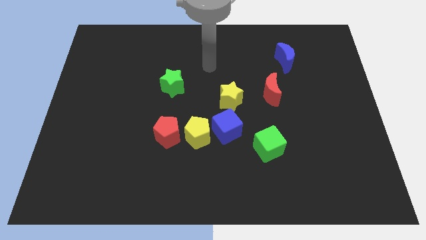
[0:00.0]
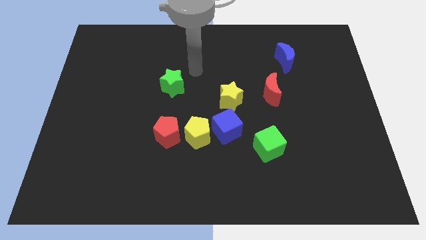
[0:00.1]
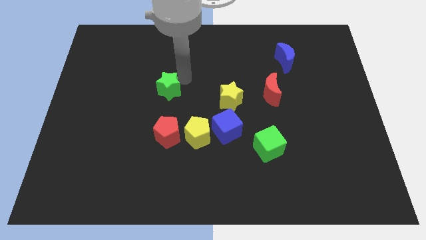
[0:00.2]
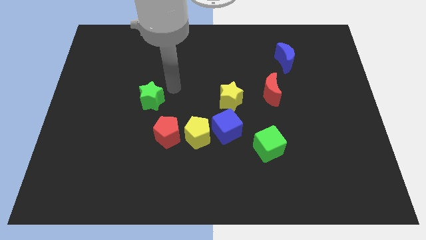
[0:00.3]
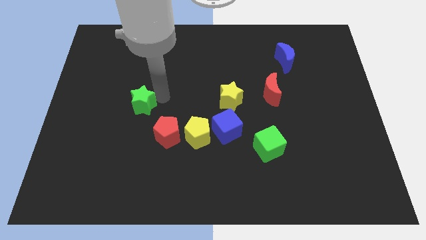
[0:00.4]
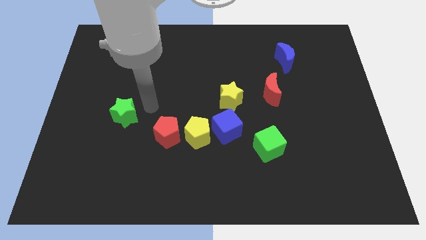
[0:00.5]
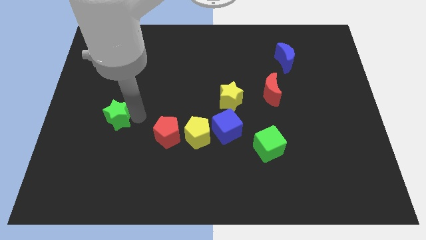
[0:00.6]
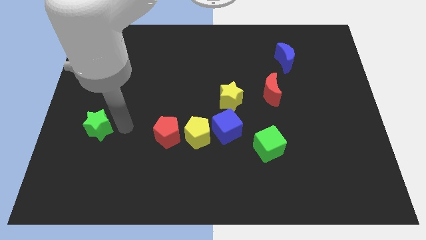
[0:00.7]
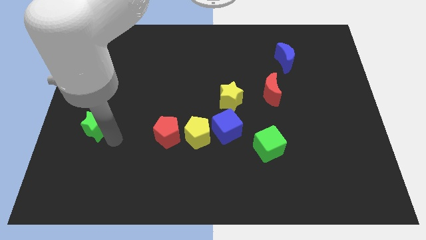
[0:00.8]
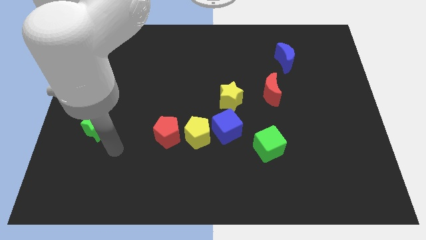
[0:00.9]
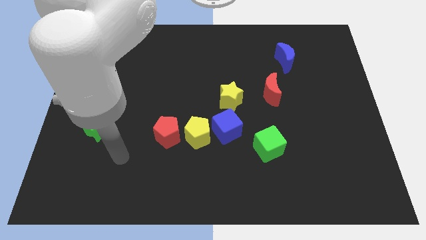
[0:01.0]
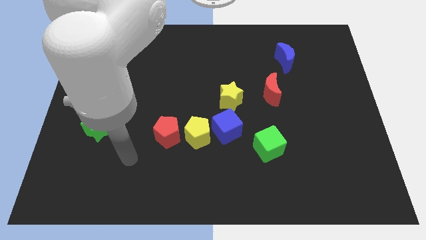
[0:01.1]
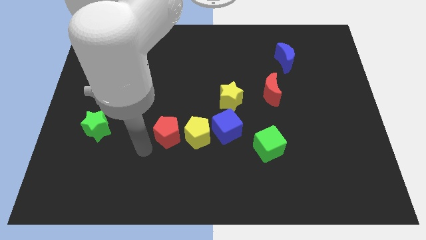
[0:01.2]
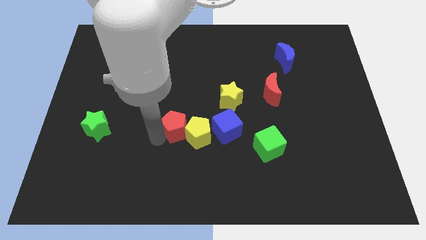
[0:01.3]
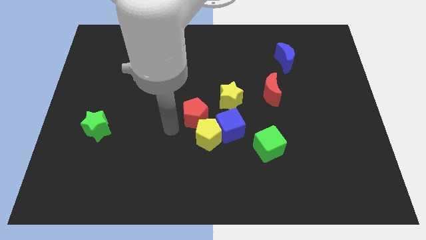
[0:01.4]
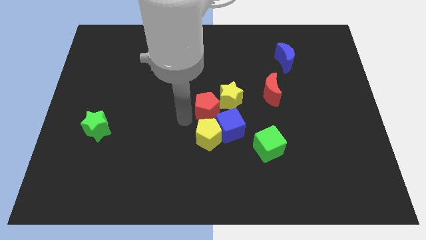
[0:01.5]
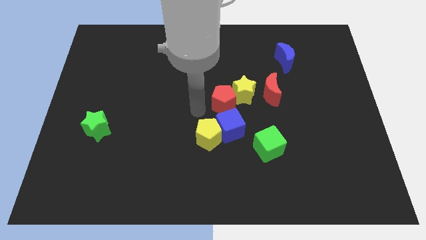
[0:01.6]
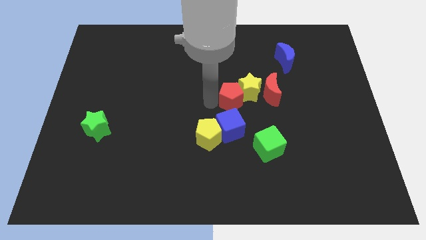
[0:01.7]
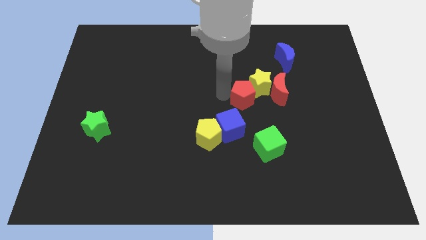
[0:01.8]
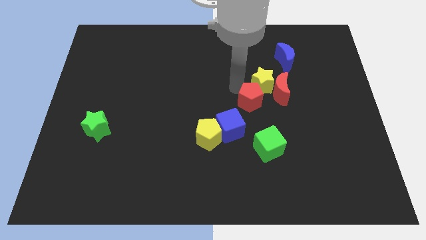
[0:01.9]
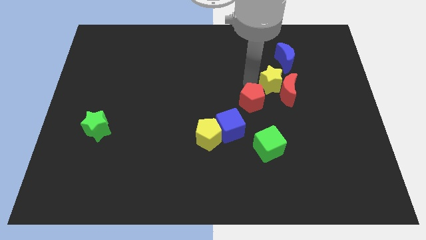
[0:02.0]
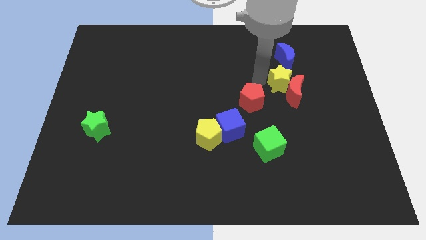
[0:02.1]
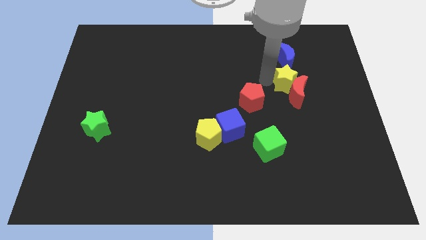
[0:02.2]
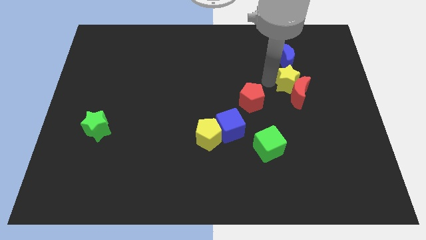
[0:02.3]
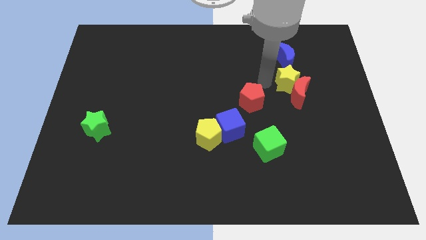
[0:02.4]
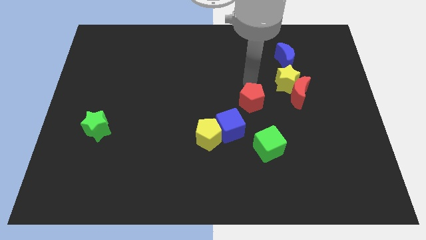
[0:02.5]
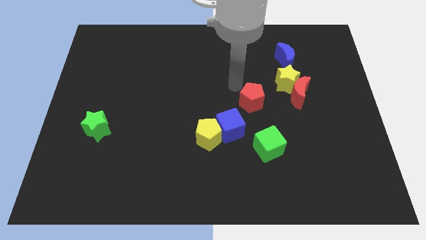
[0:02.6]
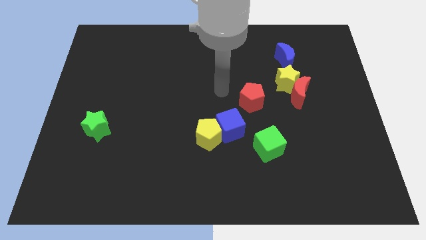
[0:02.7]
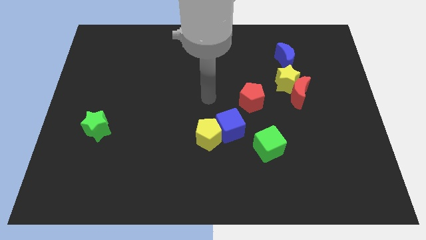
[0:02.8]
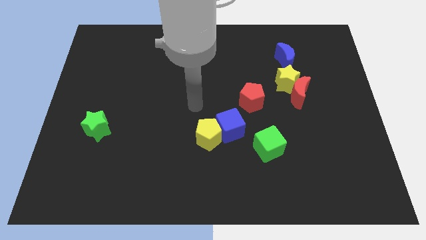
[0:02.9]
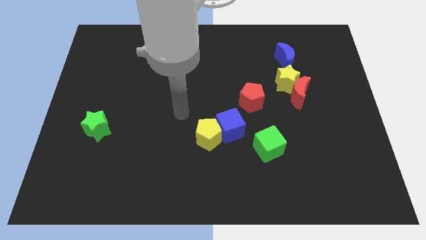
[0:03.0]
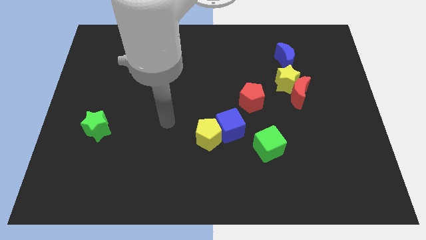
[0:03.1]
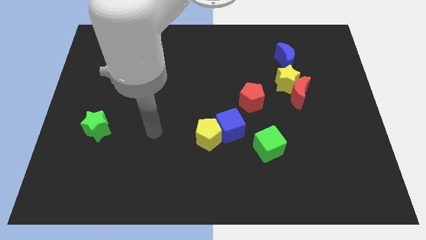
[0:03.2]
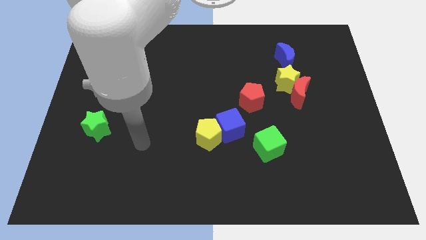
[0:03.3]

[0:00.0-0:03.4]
separate the green star from a group of blocks

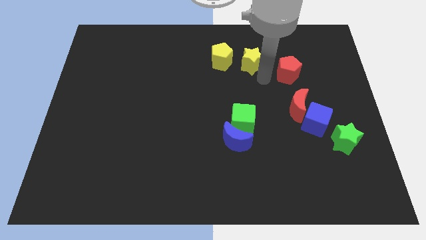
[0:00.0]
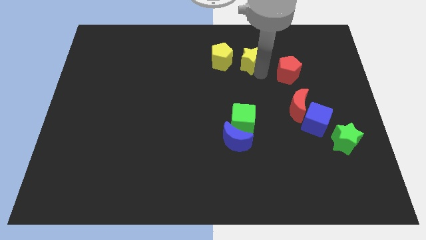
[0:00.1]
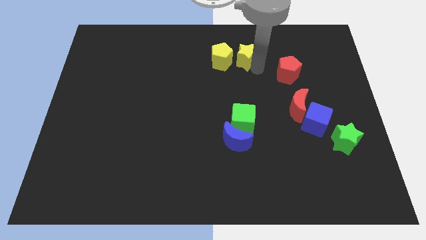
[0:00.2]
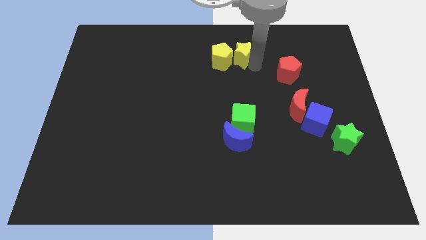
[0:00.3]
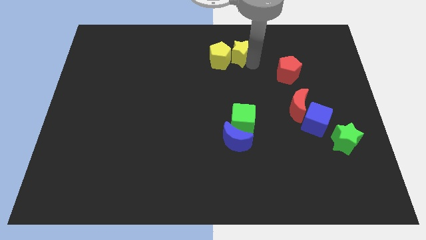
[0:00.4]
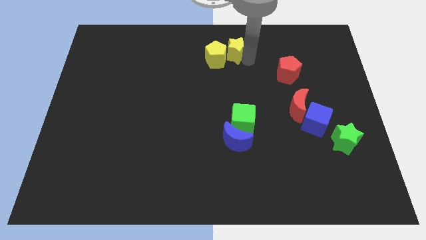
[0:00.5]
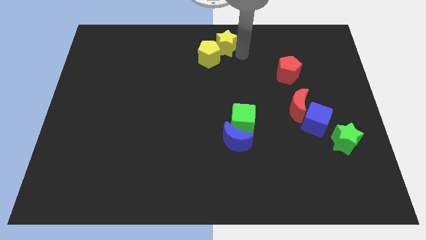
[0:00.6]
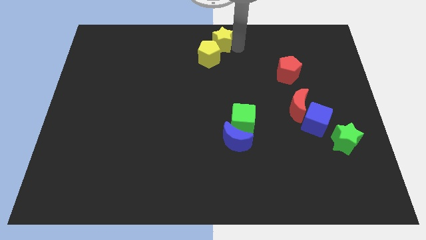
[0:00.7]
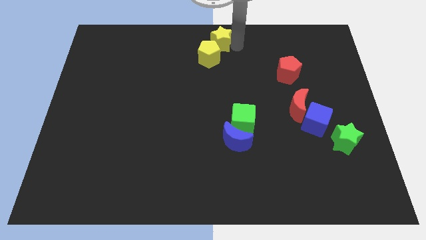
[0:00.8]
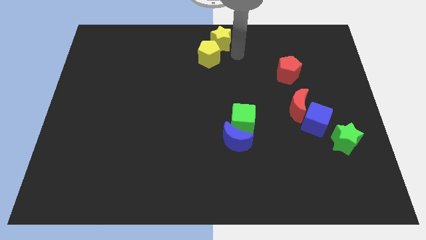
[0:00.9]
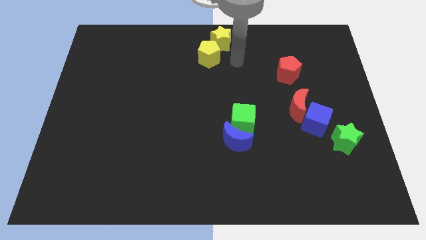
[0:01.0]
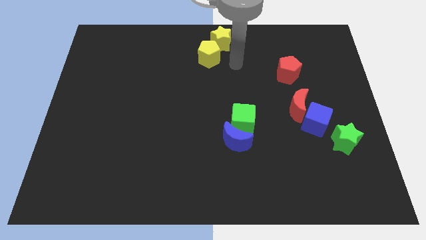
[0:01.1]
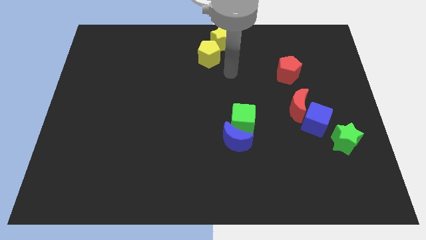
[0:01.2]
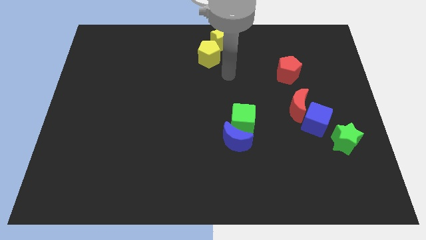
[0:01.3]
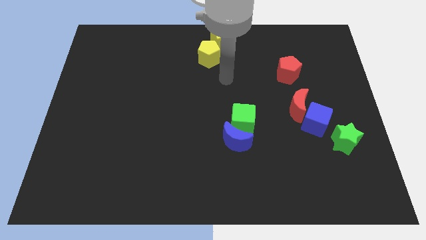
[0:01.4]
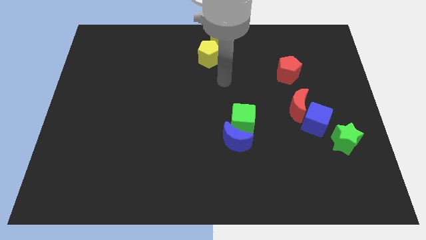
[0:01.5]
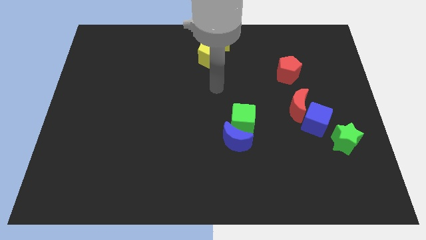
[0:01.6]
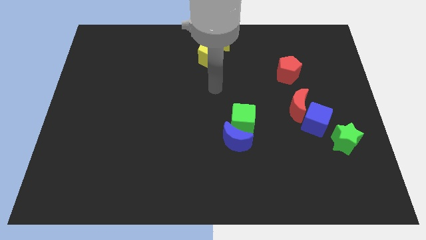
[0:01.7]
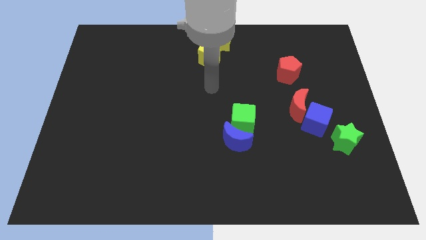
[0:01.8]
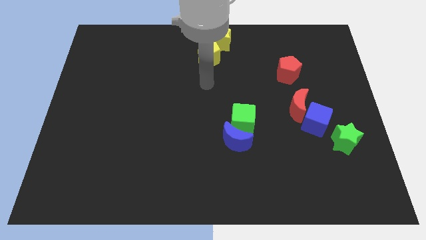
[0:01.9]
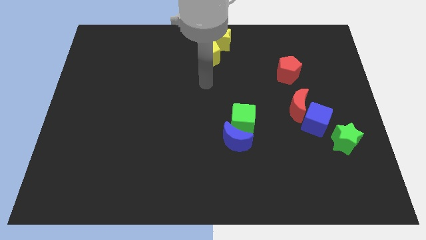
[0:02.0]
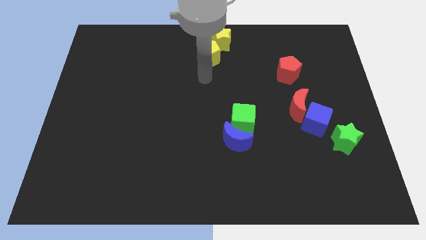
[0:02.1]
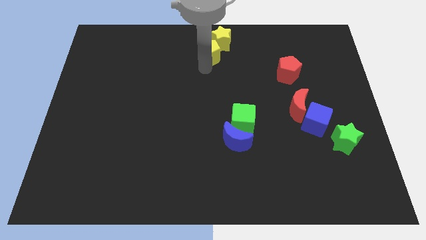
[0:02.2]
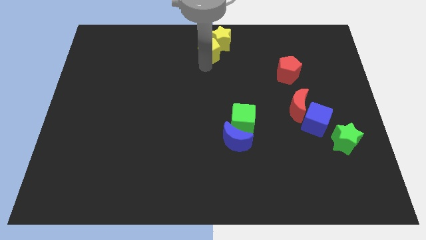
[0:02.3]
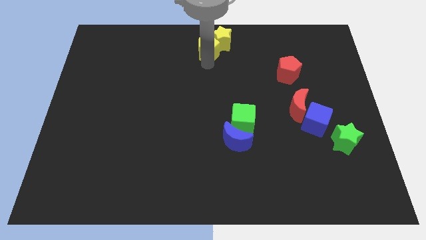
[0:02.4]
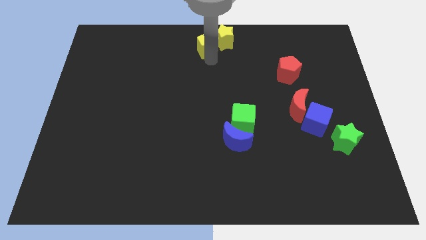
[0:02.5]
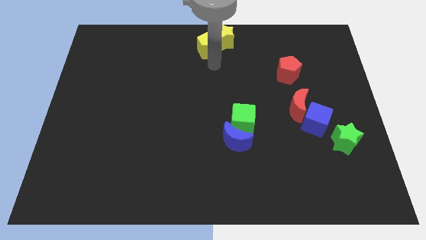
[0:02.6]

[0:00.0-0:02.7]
push the yellow star and yellow pentagon towards the top center of the board

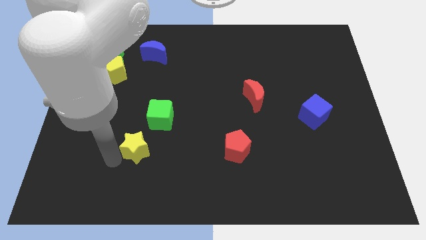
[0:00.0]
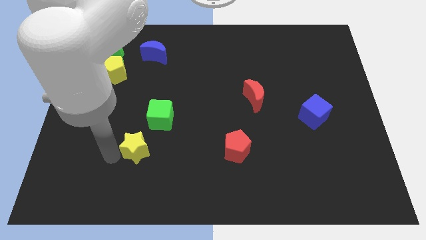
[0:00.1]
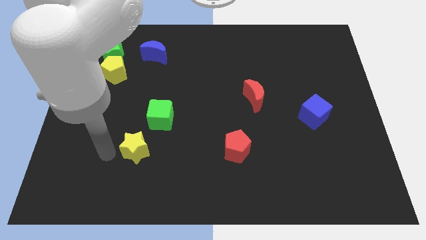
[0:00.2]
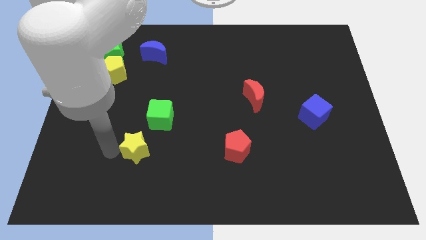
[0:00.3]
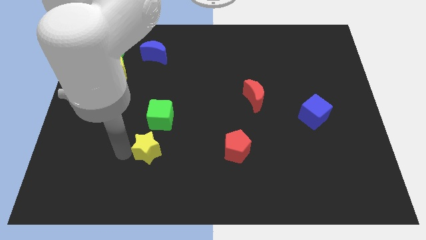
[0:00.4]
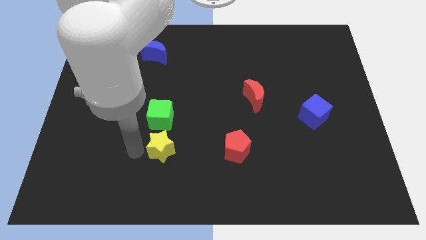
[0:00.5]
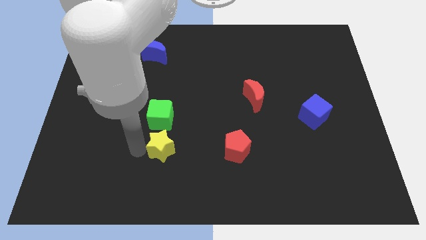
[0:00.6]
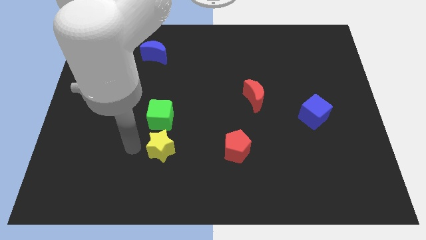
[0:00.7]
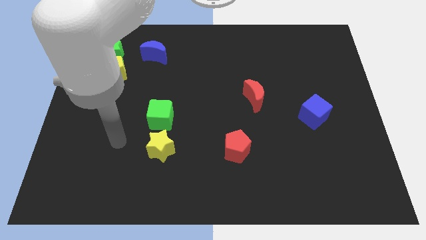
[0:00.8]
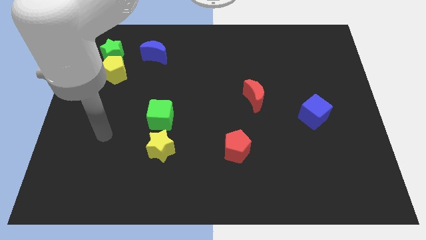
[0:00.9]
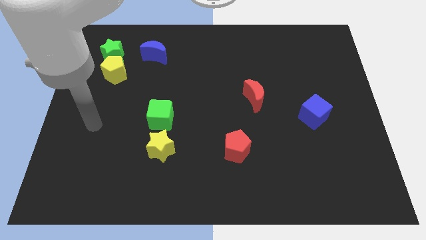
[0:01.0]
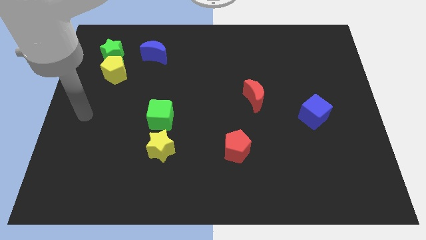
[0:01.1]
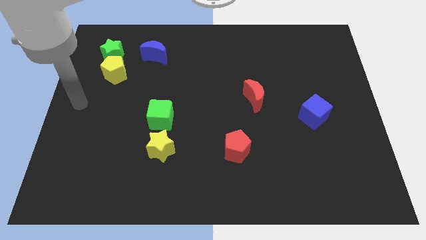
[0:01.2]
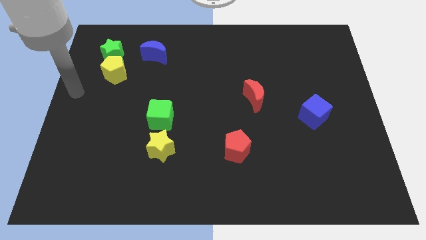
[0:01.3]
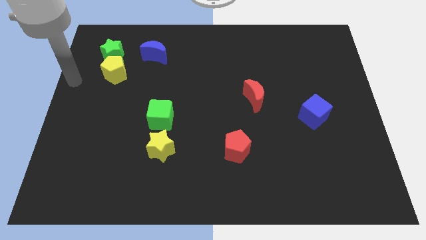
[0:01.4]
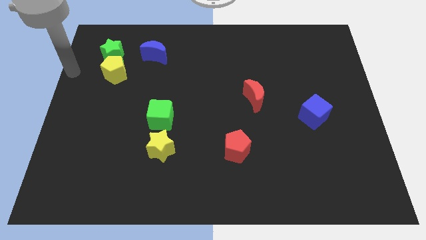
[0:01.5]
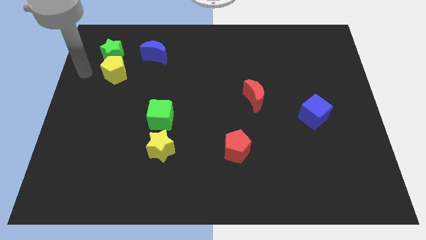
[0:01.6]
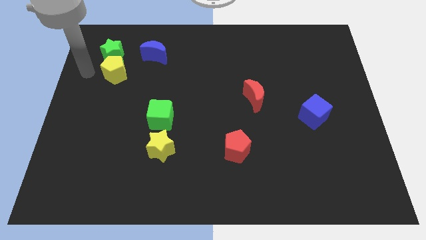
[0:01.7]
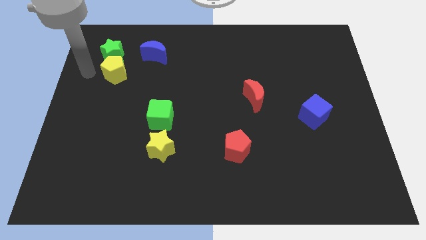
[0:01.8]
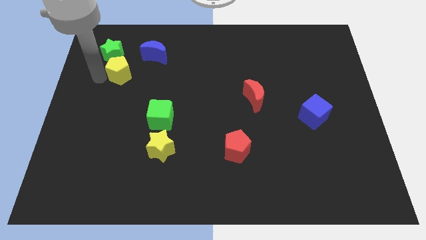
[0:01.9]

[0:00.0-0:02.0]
slightly move the yellow pentagon towards the center side

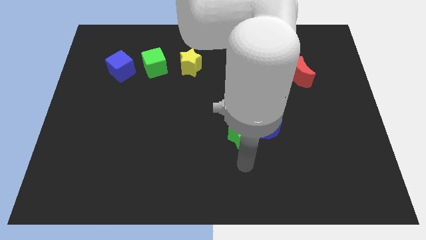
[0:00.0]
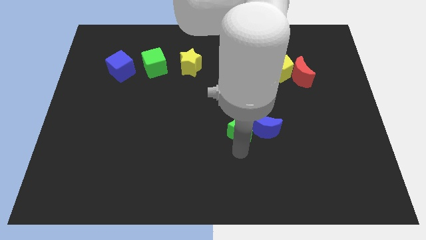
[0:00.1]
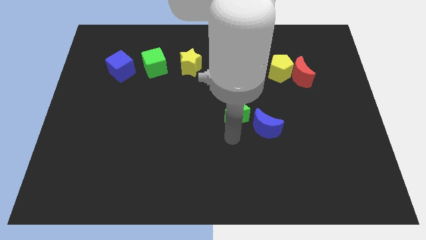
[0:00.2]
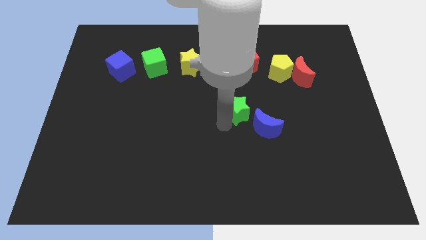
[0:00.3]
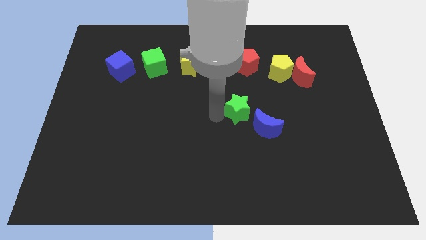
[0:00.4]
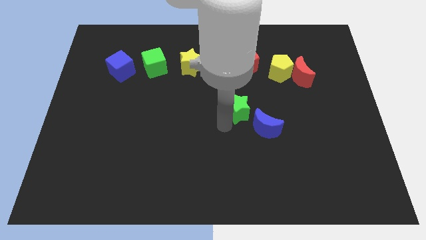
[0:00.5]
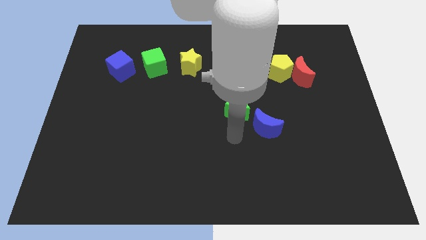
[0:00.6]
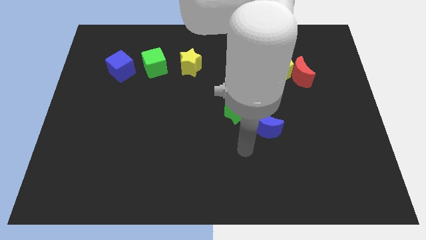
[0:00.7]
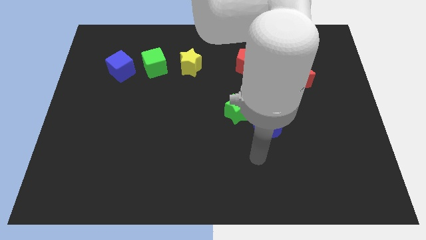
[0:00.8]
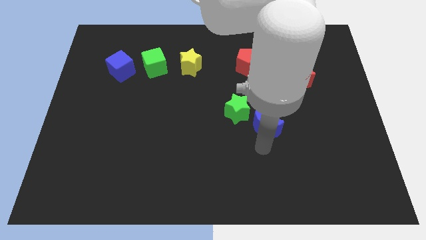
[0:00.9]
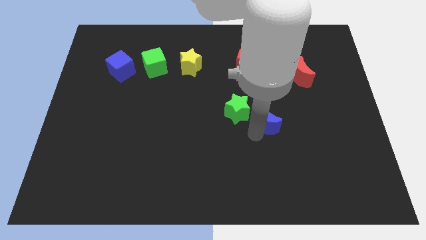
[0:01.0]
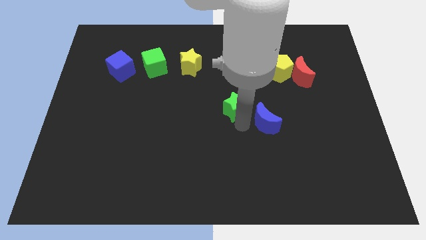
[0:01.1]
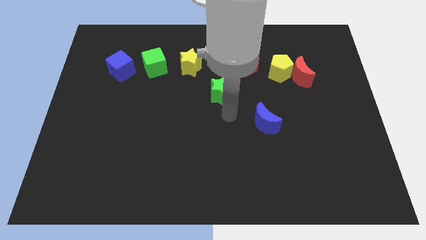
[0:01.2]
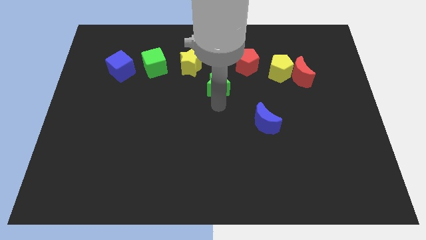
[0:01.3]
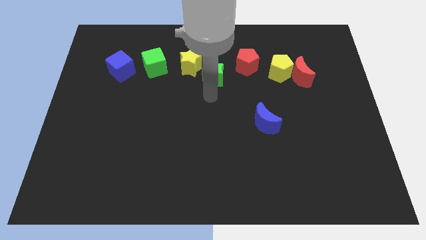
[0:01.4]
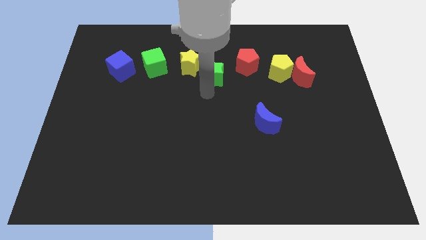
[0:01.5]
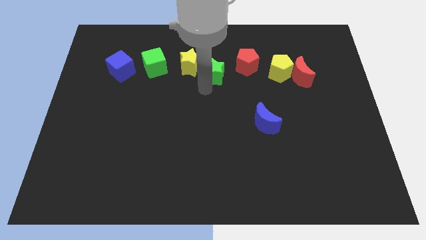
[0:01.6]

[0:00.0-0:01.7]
move green star towards the top center of the board
